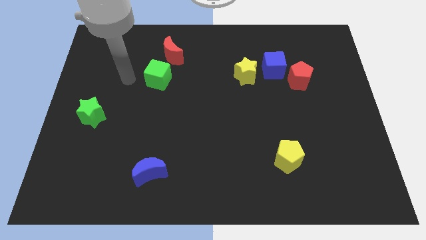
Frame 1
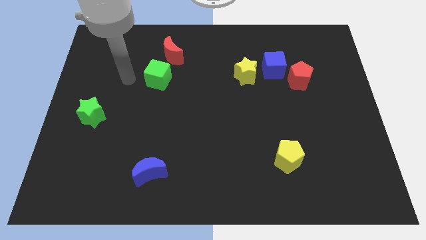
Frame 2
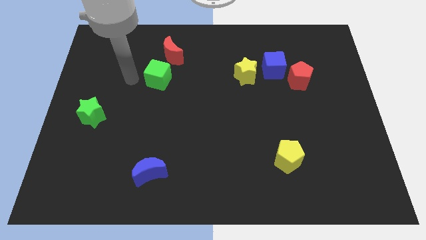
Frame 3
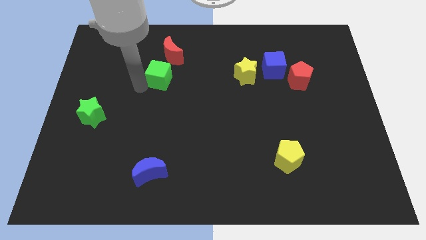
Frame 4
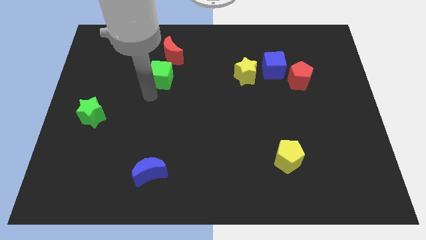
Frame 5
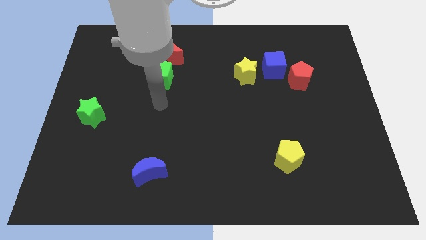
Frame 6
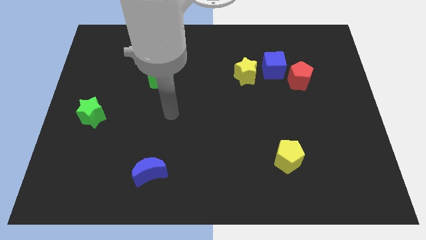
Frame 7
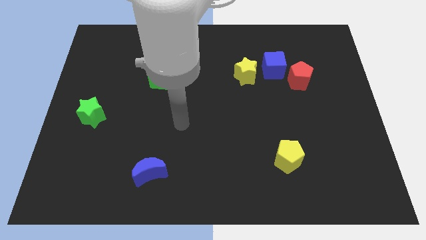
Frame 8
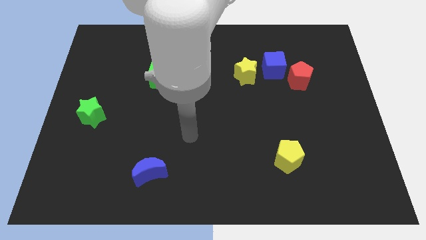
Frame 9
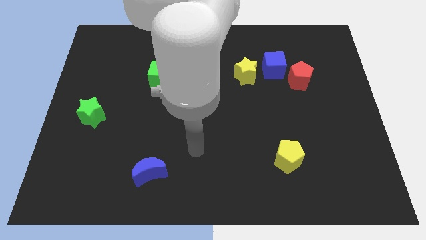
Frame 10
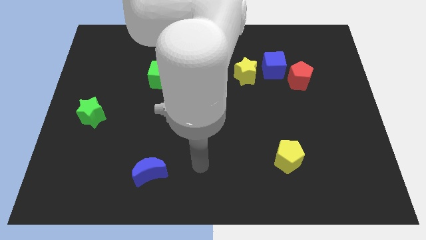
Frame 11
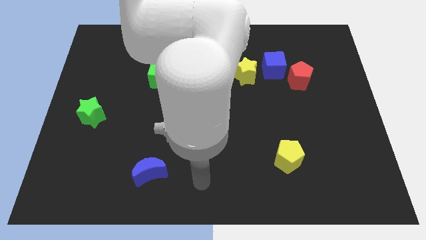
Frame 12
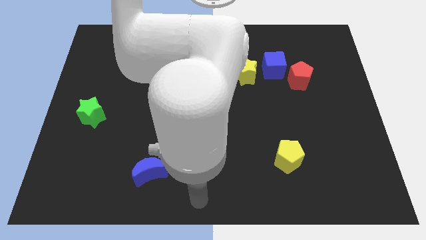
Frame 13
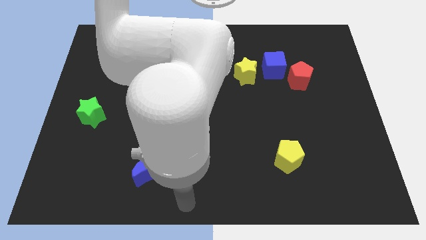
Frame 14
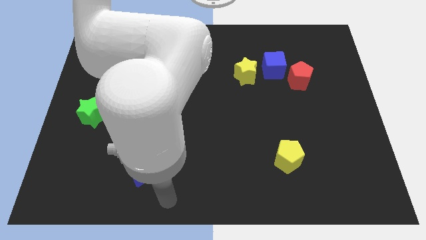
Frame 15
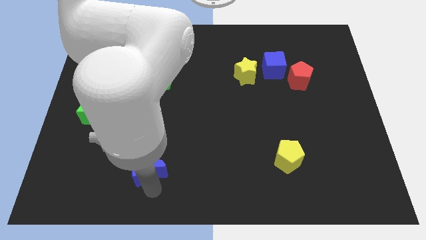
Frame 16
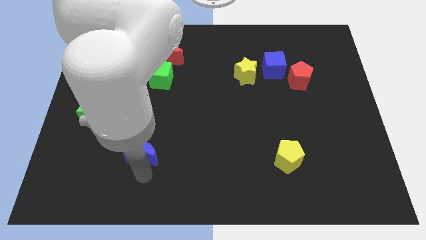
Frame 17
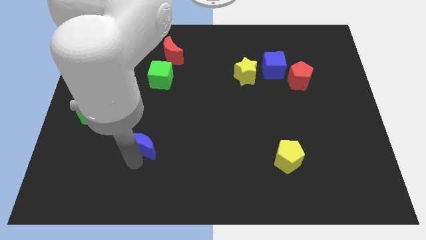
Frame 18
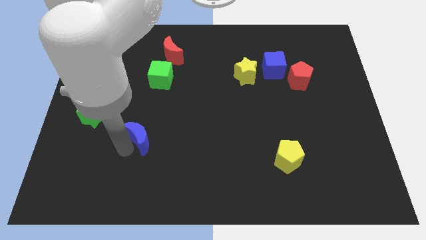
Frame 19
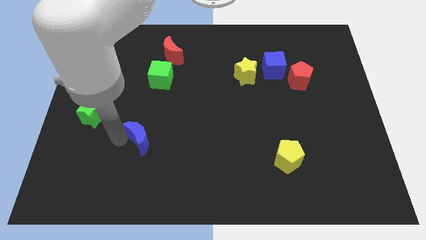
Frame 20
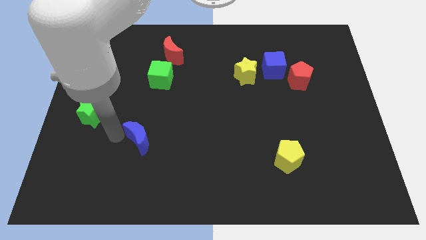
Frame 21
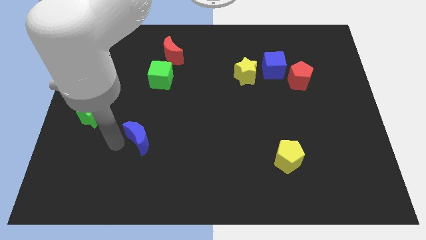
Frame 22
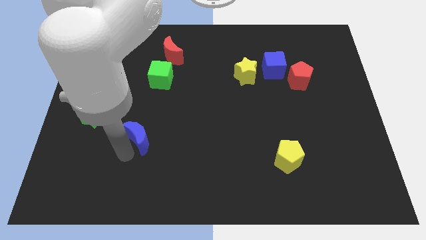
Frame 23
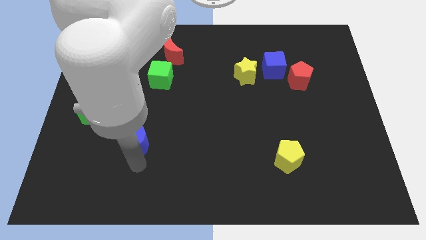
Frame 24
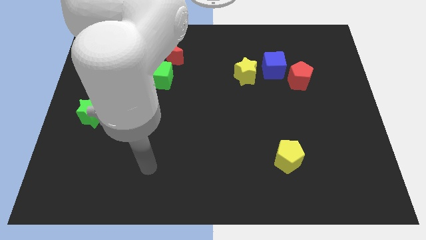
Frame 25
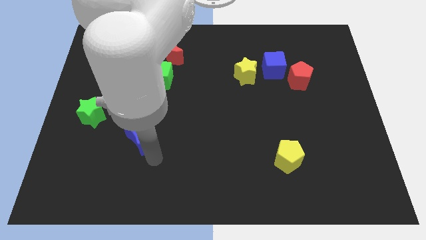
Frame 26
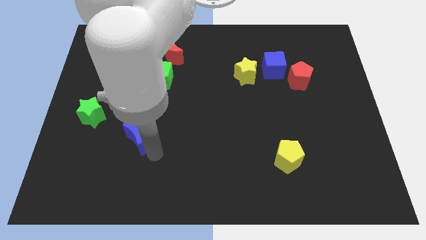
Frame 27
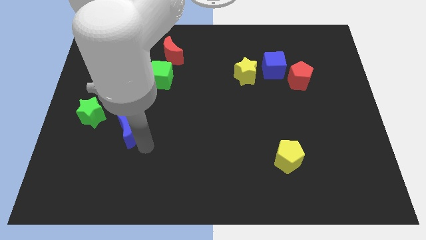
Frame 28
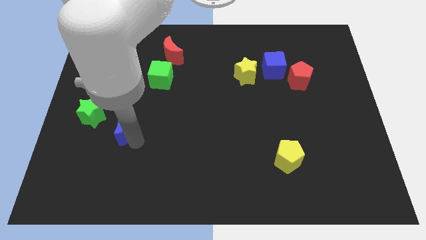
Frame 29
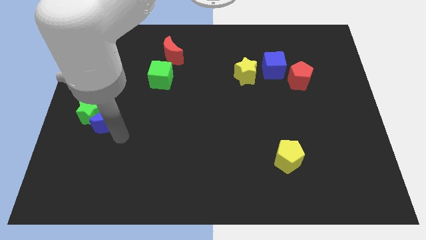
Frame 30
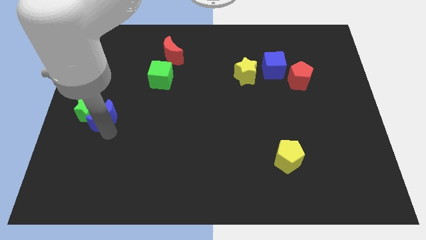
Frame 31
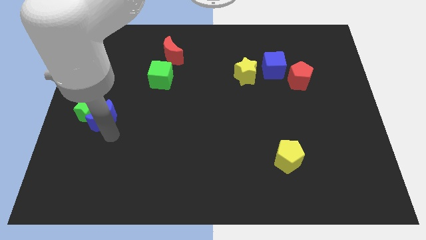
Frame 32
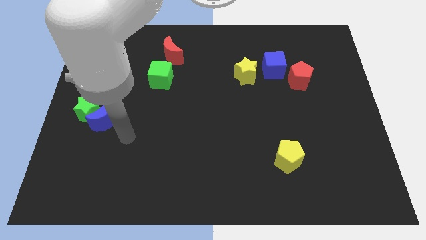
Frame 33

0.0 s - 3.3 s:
push the blue moon into the green star

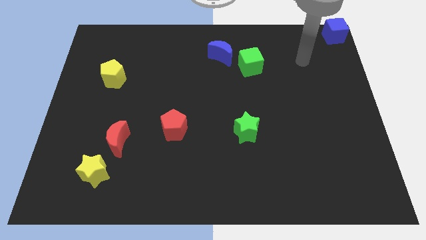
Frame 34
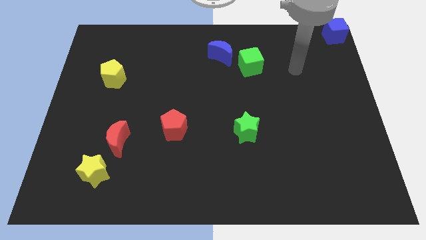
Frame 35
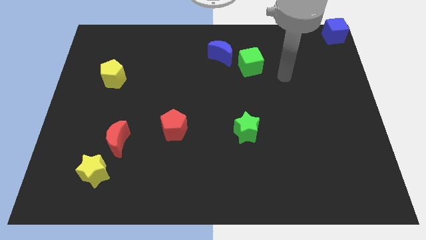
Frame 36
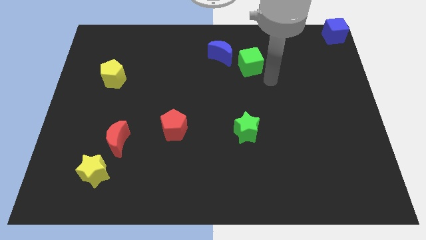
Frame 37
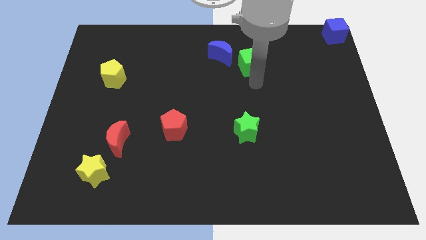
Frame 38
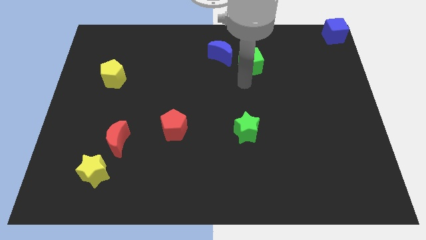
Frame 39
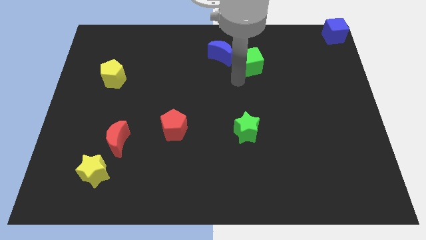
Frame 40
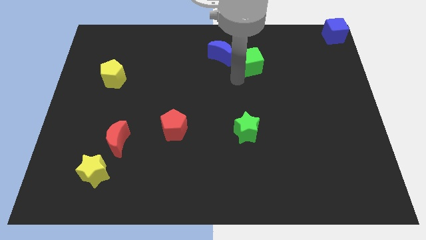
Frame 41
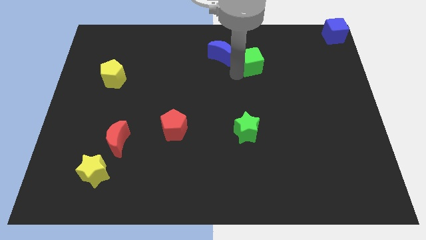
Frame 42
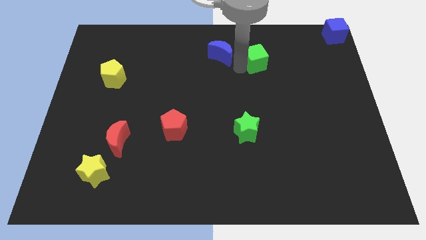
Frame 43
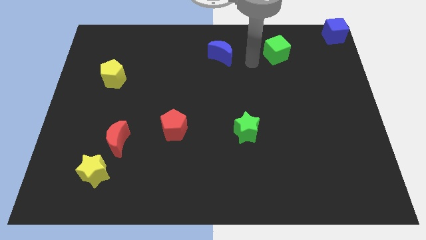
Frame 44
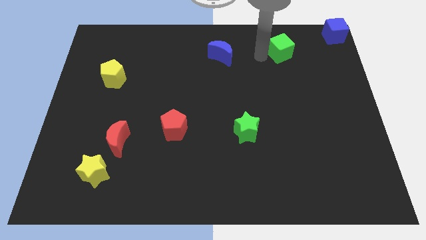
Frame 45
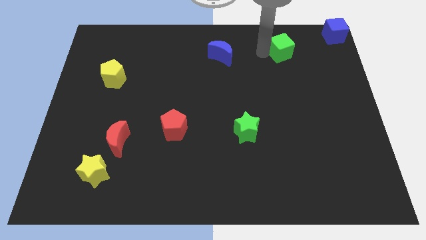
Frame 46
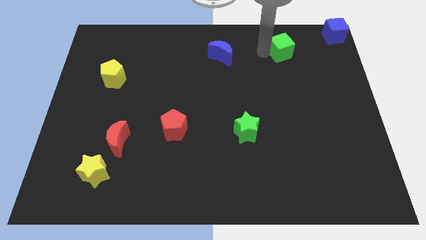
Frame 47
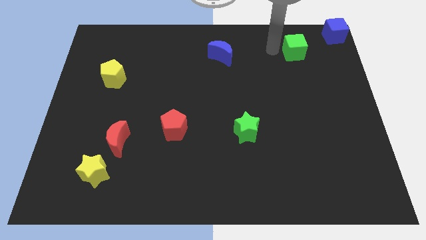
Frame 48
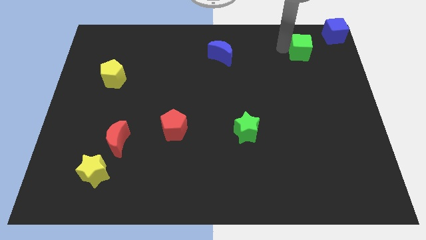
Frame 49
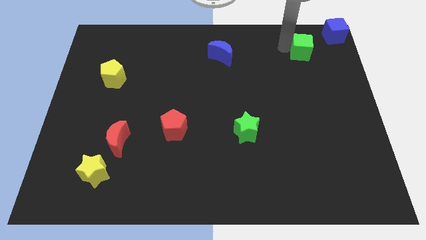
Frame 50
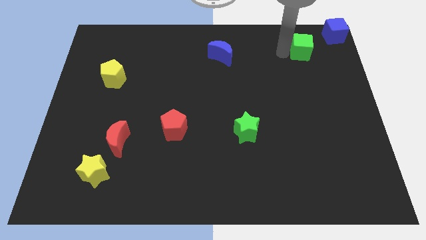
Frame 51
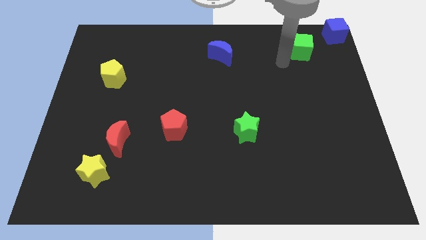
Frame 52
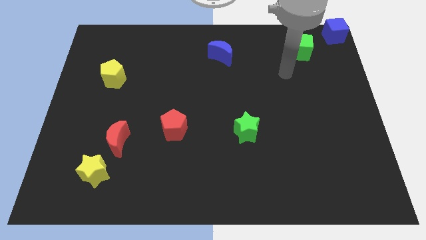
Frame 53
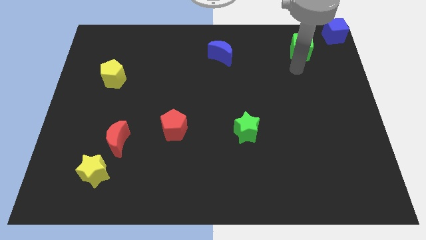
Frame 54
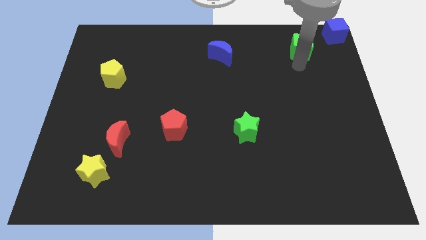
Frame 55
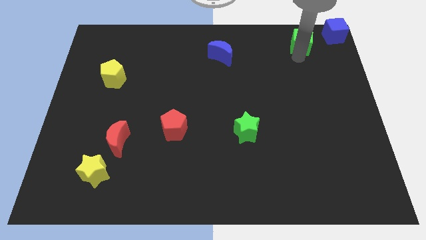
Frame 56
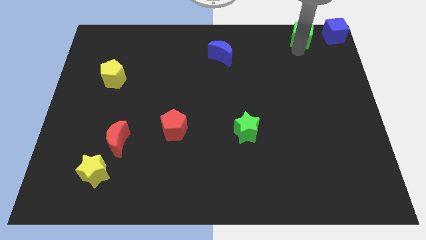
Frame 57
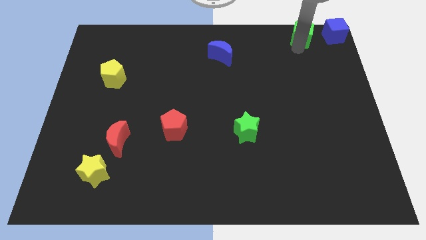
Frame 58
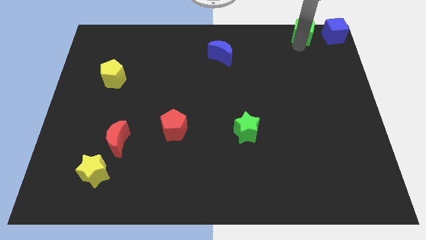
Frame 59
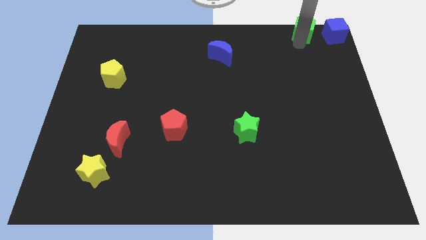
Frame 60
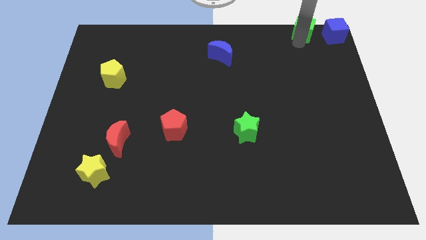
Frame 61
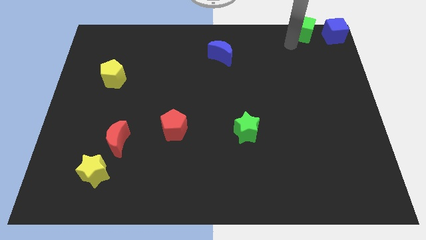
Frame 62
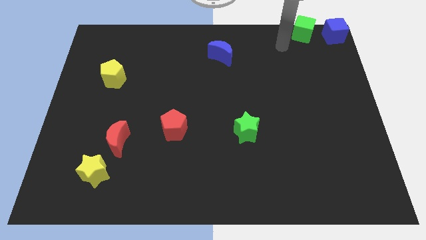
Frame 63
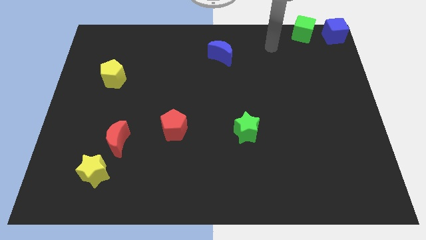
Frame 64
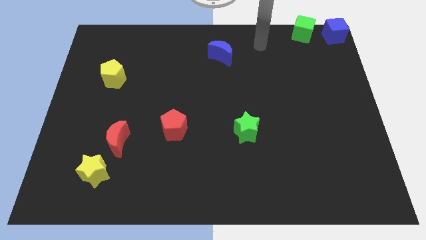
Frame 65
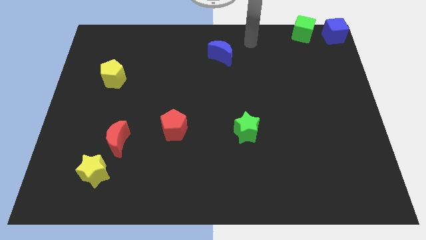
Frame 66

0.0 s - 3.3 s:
place the green cube left to the blue cube

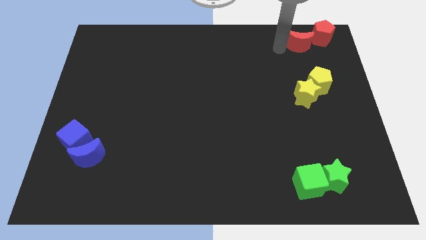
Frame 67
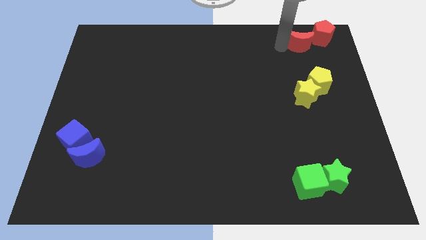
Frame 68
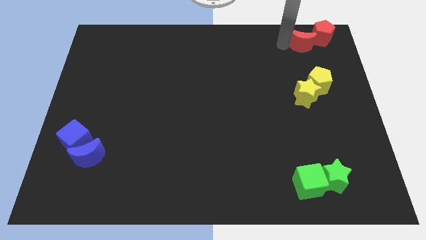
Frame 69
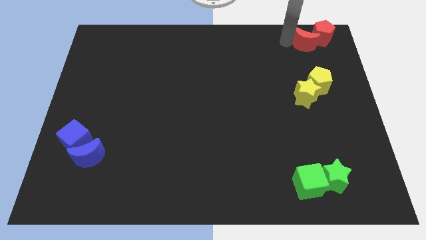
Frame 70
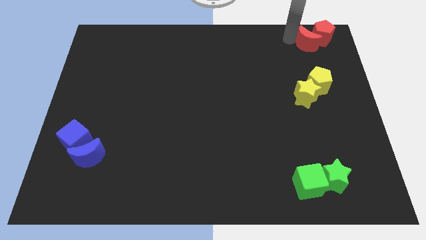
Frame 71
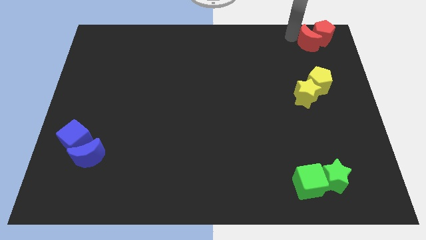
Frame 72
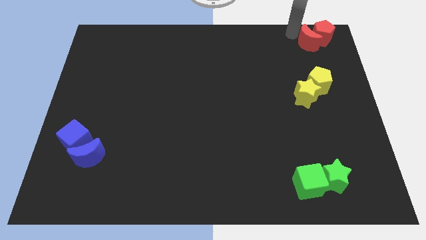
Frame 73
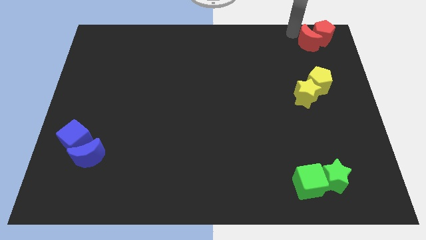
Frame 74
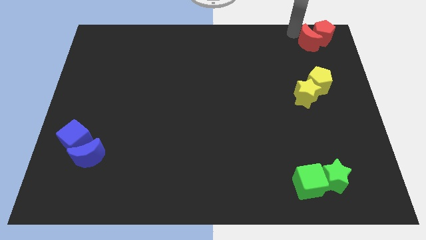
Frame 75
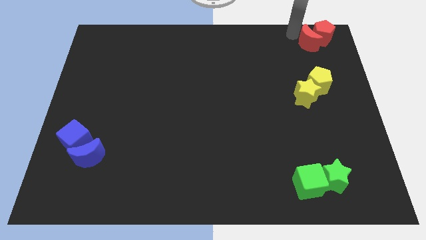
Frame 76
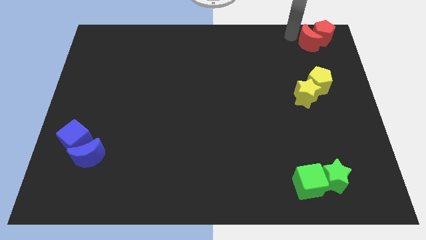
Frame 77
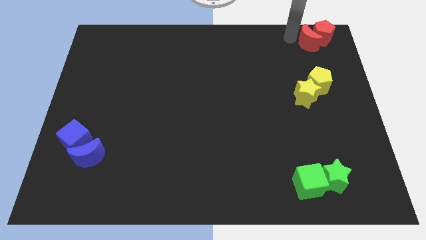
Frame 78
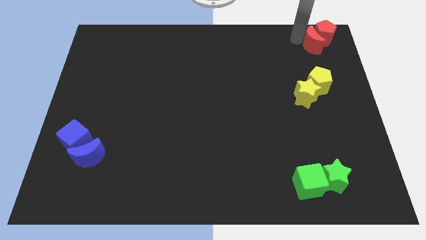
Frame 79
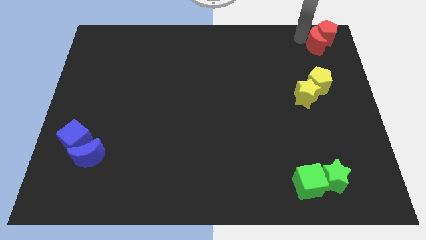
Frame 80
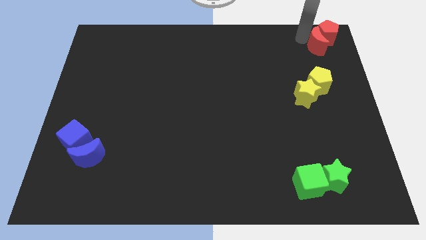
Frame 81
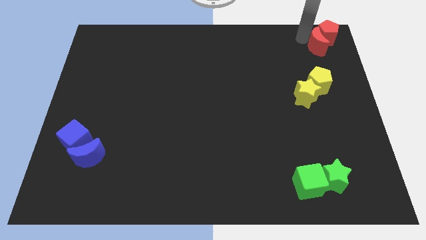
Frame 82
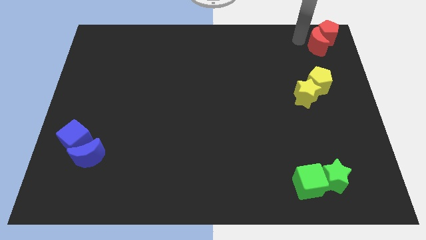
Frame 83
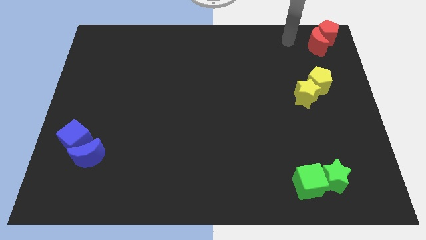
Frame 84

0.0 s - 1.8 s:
bring the red moon close to the red pentagon

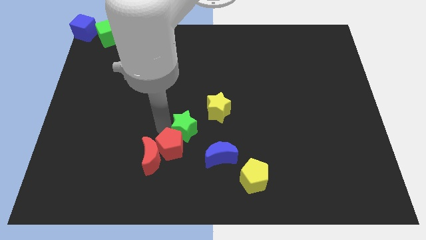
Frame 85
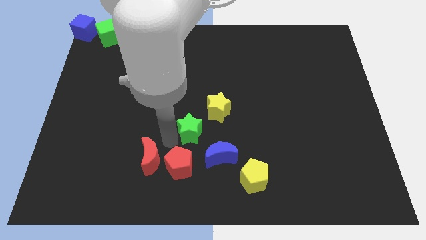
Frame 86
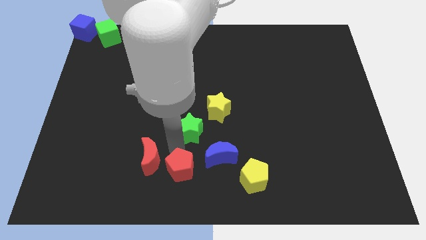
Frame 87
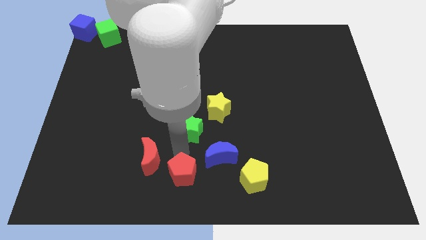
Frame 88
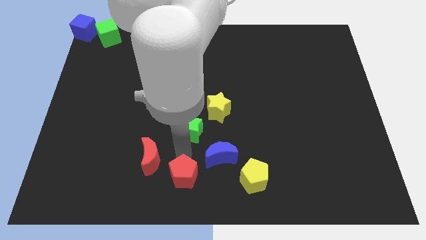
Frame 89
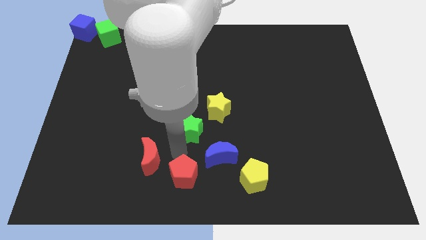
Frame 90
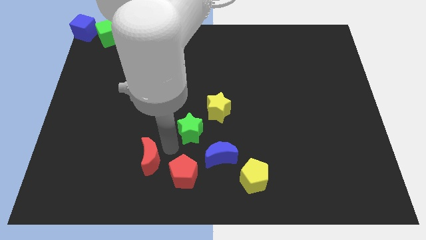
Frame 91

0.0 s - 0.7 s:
separate red pentagon from green star and red moon
